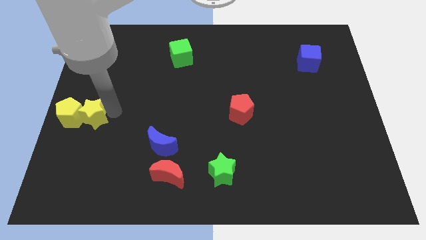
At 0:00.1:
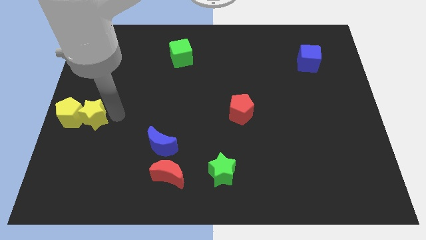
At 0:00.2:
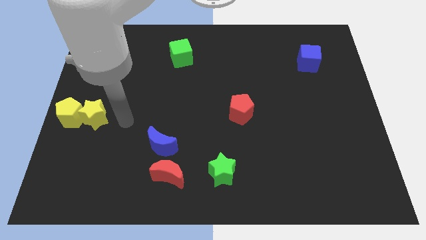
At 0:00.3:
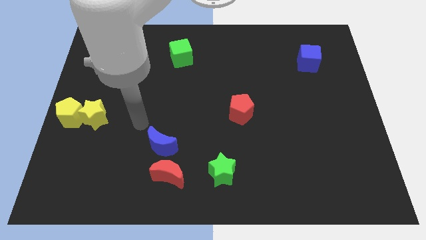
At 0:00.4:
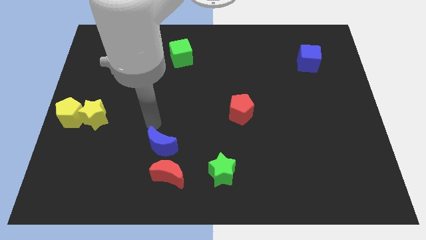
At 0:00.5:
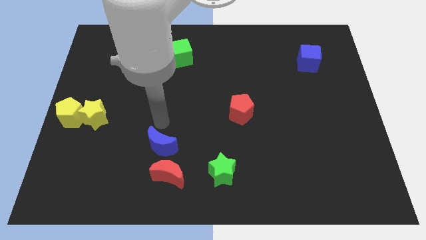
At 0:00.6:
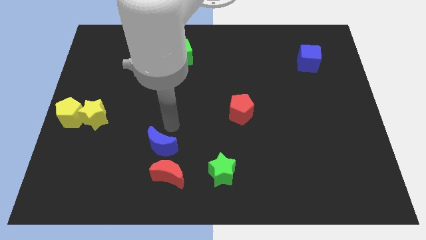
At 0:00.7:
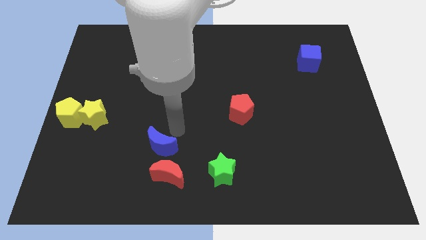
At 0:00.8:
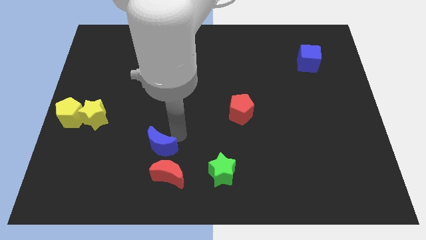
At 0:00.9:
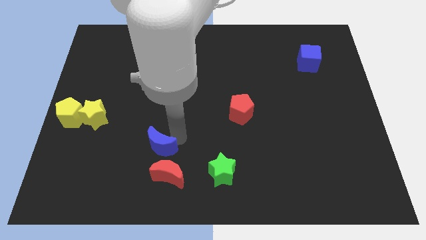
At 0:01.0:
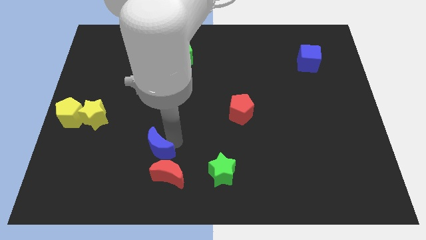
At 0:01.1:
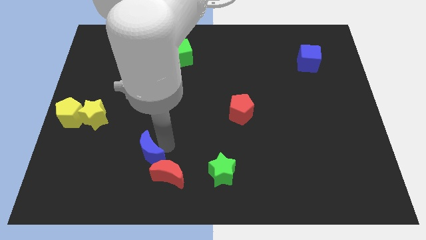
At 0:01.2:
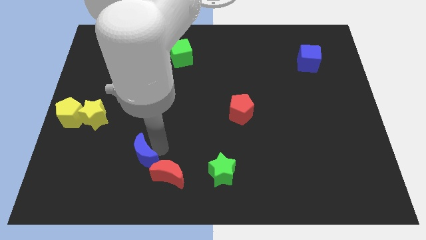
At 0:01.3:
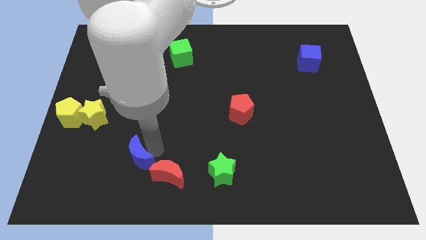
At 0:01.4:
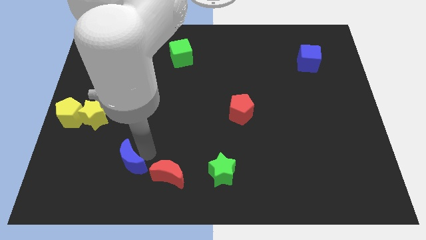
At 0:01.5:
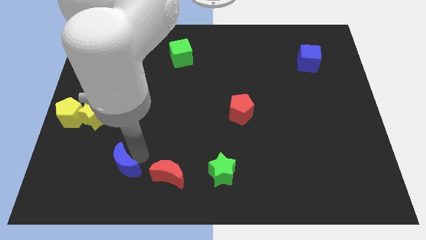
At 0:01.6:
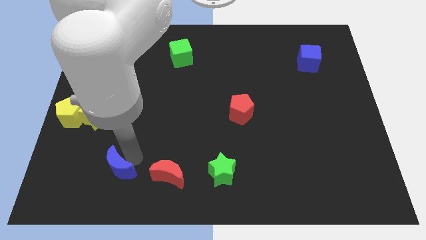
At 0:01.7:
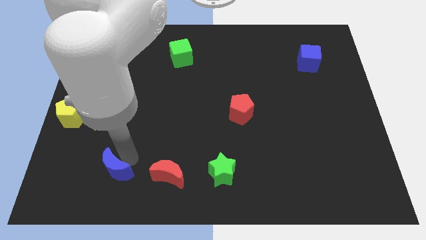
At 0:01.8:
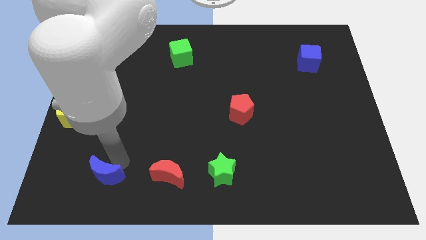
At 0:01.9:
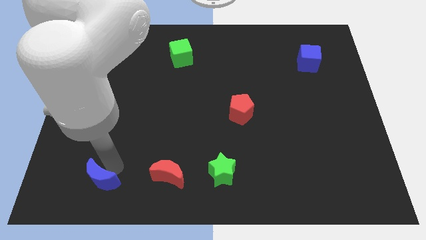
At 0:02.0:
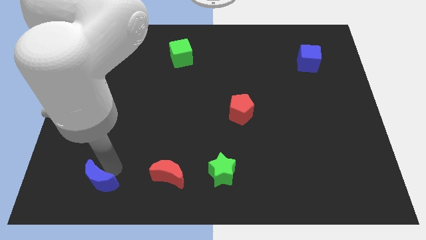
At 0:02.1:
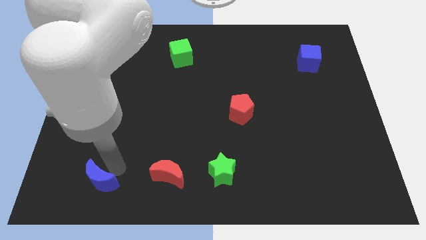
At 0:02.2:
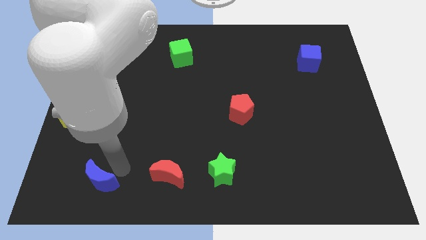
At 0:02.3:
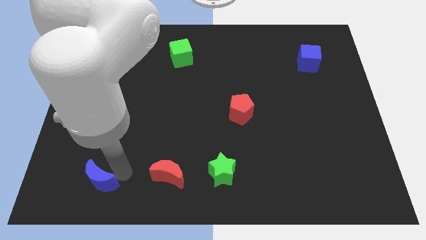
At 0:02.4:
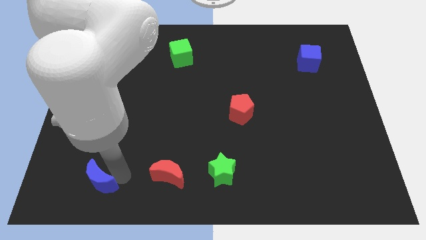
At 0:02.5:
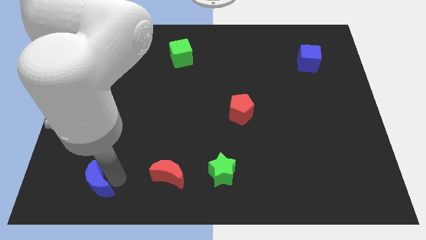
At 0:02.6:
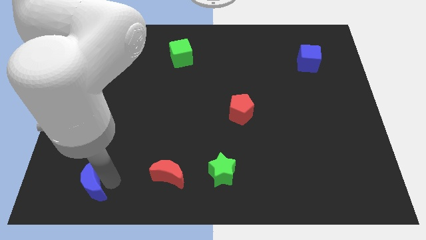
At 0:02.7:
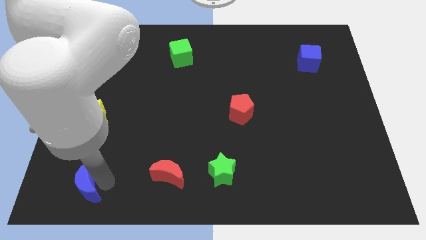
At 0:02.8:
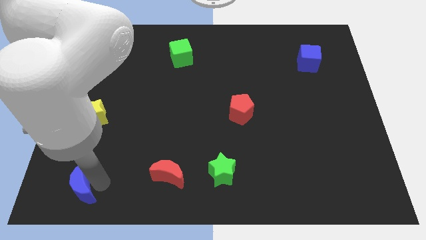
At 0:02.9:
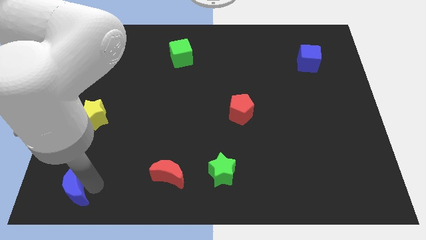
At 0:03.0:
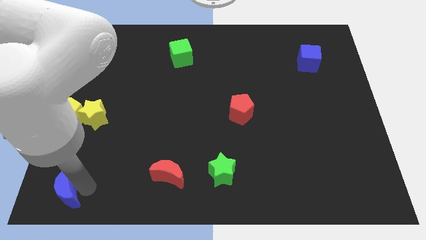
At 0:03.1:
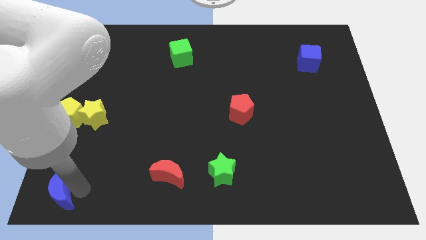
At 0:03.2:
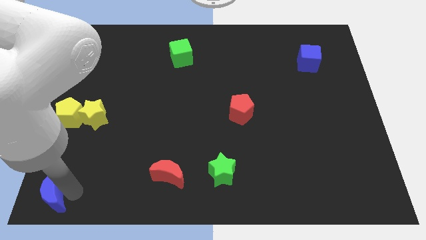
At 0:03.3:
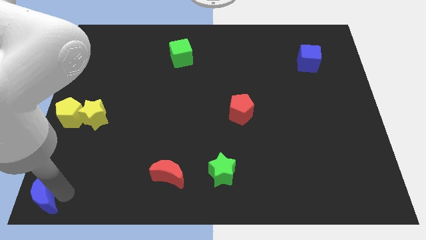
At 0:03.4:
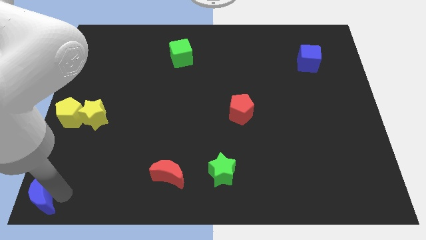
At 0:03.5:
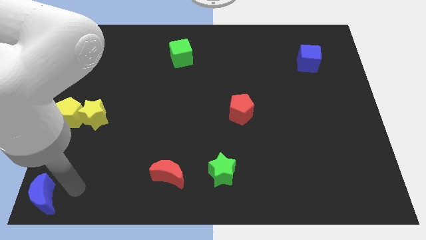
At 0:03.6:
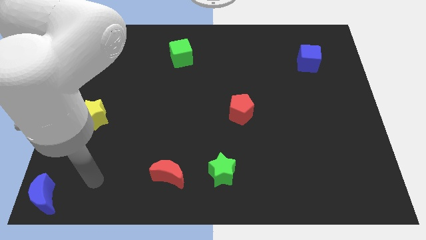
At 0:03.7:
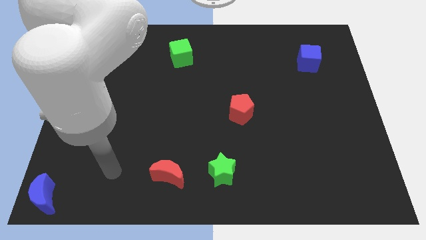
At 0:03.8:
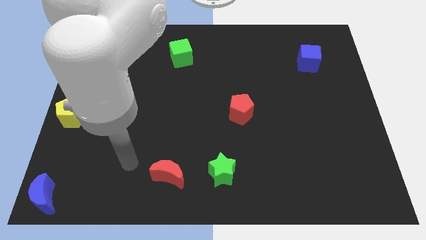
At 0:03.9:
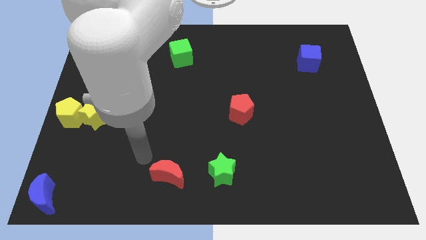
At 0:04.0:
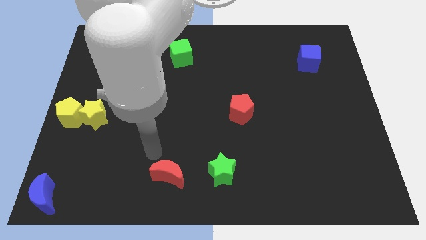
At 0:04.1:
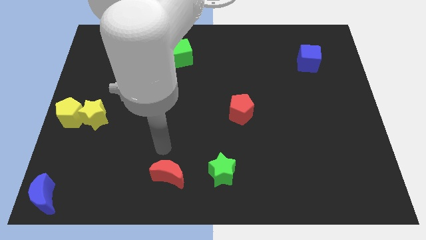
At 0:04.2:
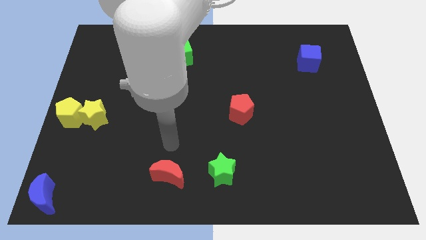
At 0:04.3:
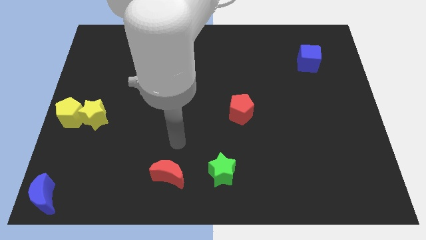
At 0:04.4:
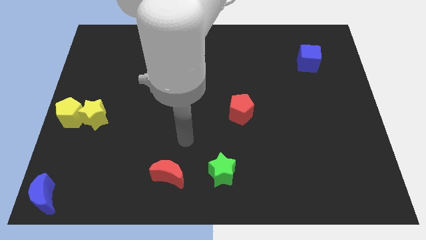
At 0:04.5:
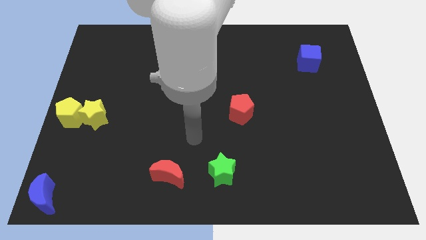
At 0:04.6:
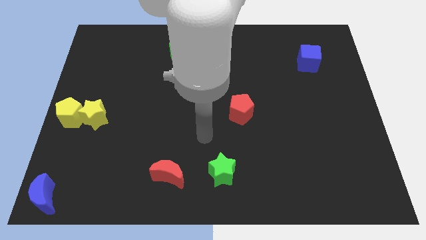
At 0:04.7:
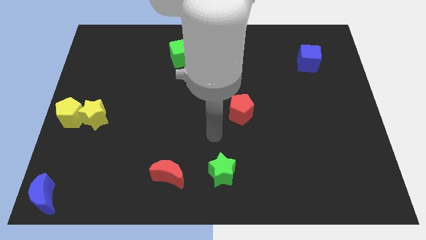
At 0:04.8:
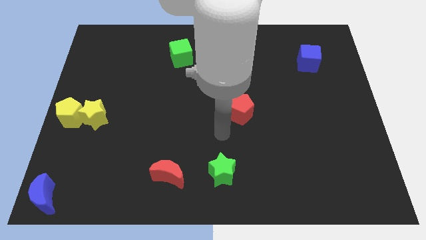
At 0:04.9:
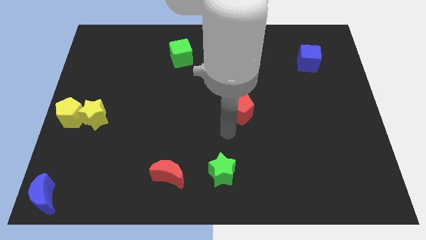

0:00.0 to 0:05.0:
place the blue moon at the bottom left corner

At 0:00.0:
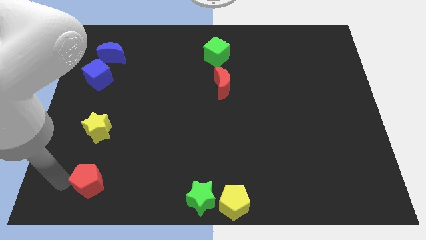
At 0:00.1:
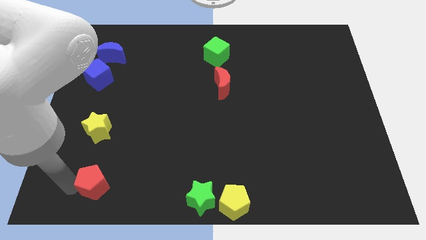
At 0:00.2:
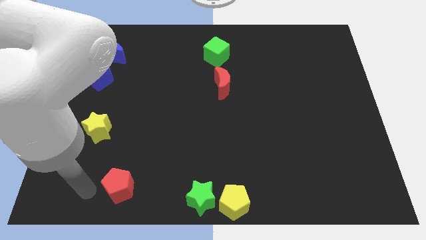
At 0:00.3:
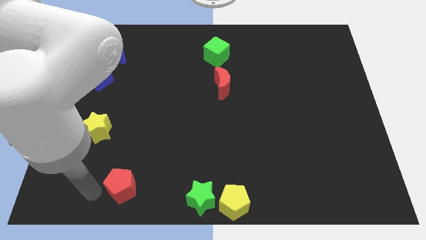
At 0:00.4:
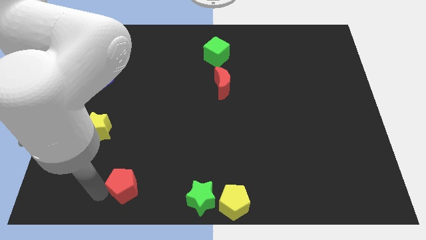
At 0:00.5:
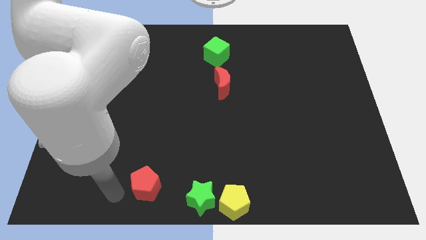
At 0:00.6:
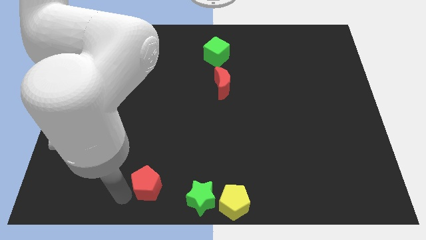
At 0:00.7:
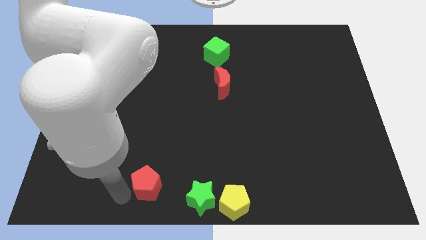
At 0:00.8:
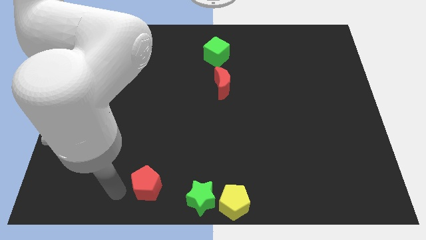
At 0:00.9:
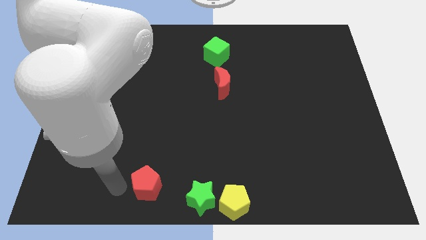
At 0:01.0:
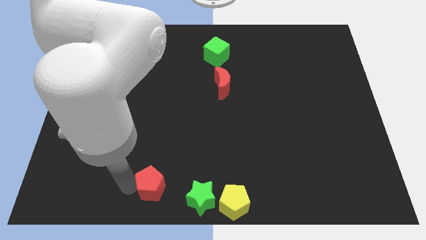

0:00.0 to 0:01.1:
push red pentagon to the right

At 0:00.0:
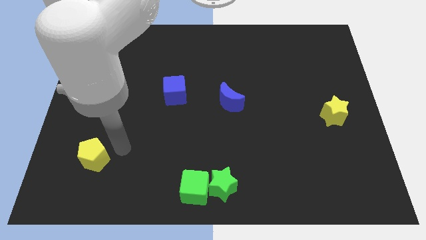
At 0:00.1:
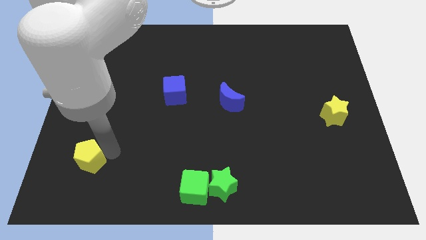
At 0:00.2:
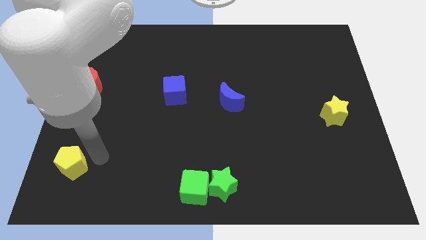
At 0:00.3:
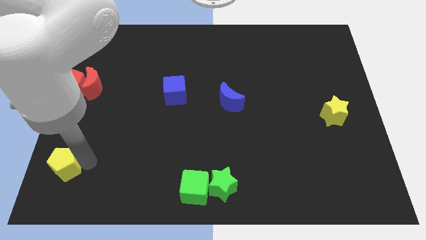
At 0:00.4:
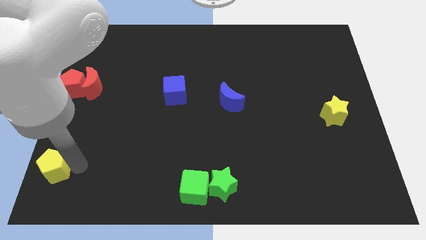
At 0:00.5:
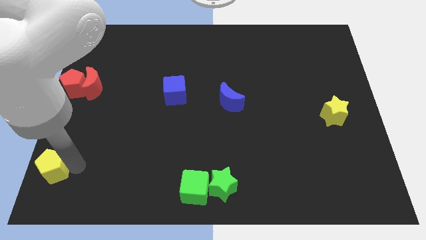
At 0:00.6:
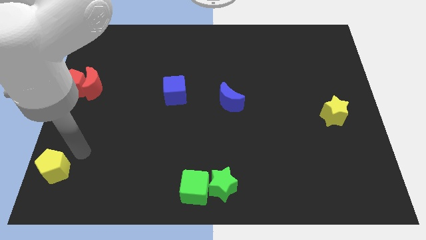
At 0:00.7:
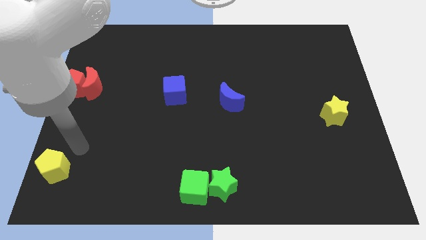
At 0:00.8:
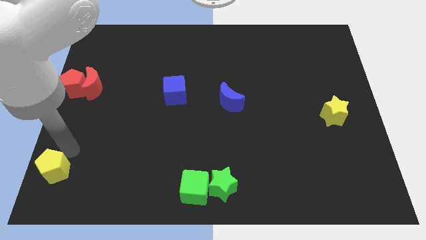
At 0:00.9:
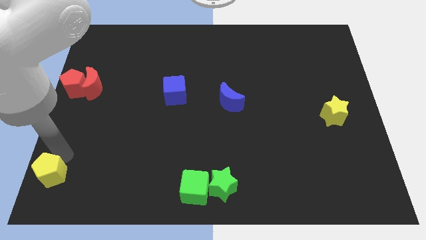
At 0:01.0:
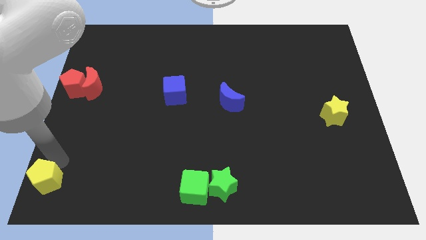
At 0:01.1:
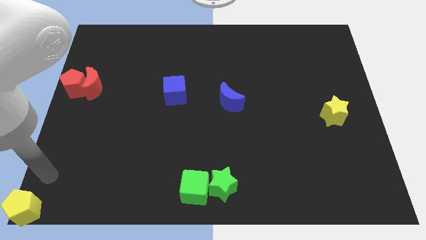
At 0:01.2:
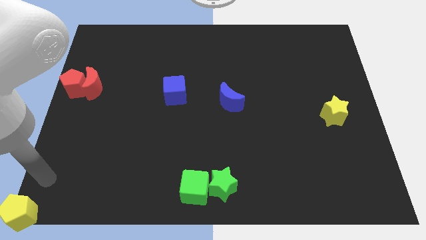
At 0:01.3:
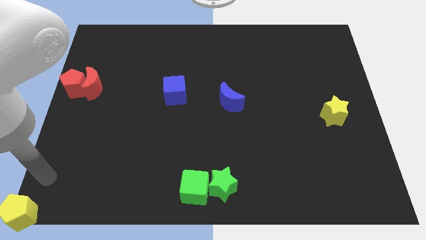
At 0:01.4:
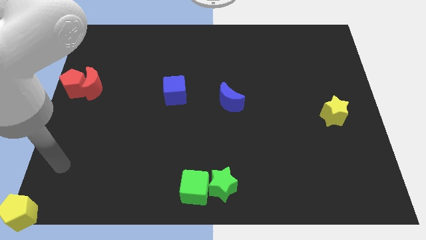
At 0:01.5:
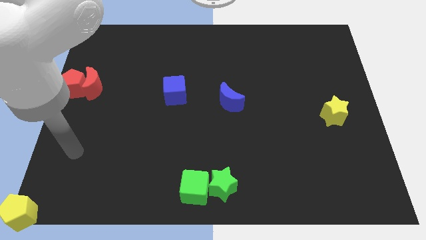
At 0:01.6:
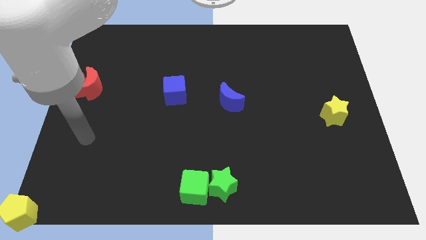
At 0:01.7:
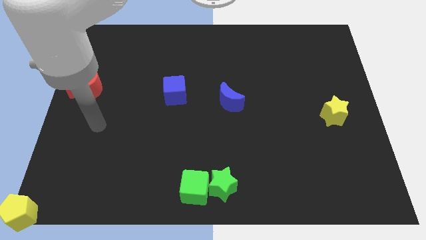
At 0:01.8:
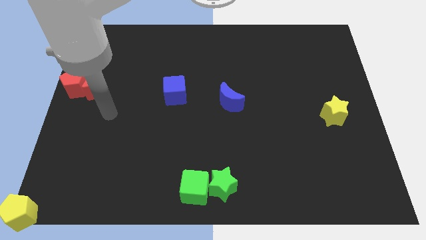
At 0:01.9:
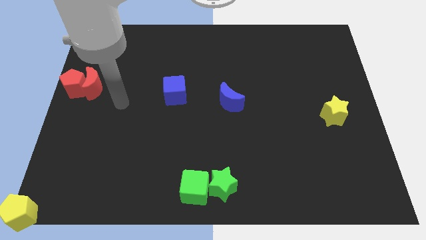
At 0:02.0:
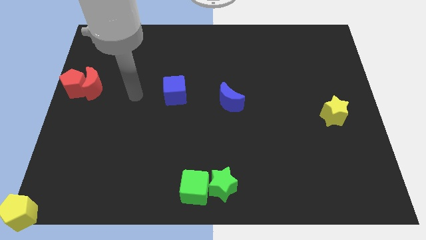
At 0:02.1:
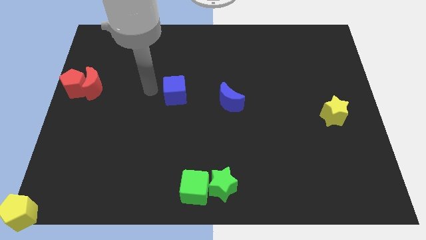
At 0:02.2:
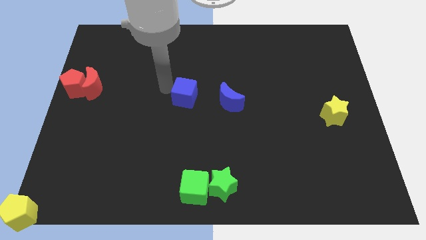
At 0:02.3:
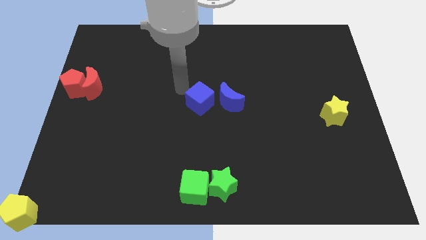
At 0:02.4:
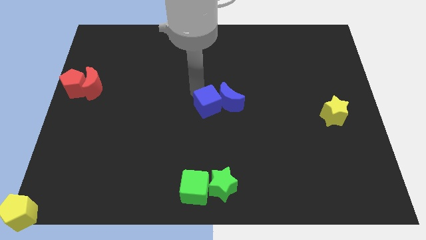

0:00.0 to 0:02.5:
slight push the yellow pentagon bottom left

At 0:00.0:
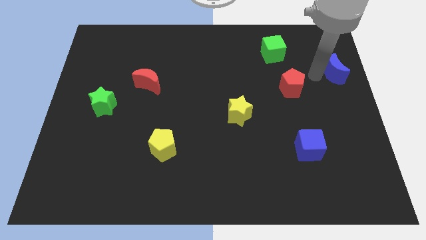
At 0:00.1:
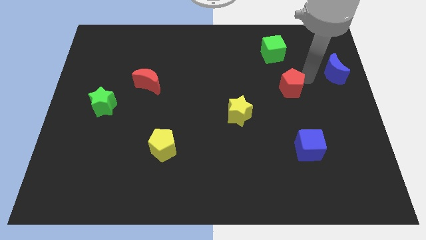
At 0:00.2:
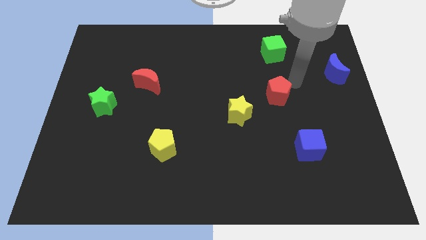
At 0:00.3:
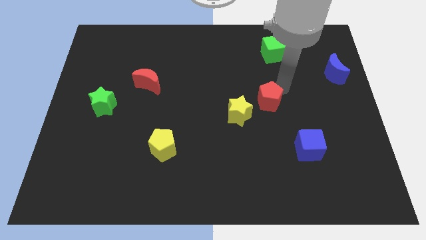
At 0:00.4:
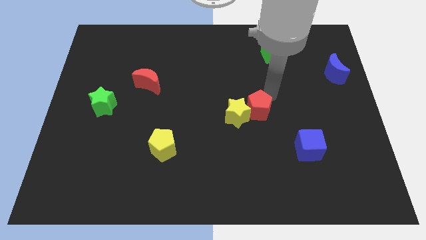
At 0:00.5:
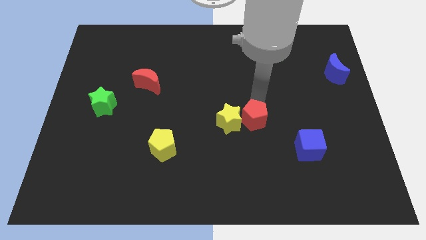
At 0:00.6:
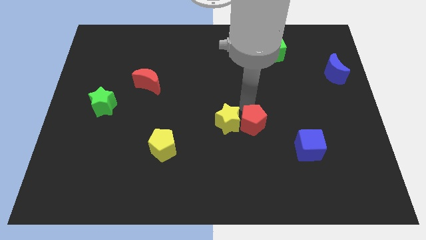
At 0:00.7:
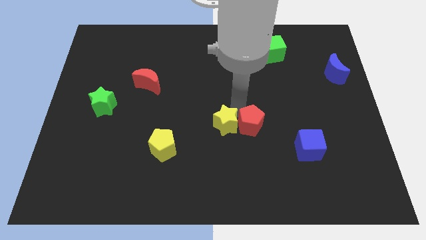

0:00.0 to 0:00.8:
push red pentagon into yellow star
